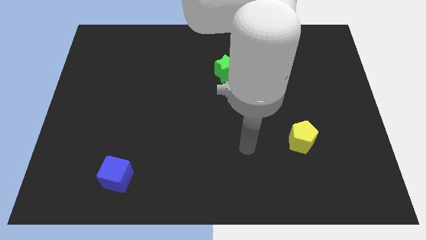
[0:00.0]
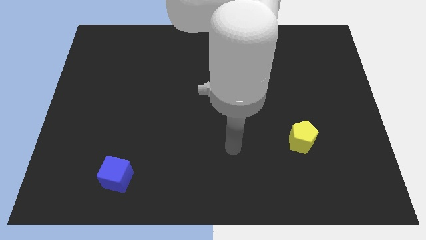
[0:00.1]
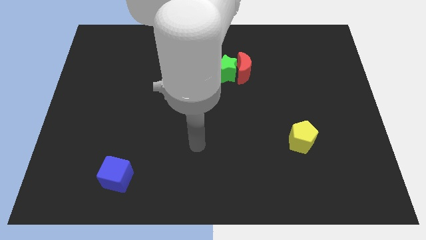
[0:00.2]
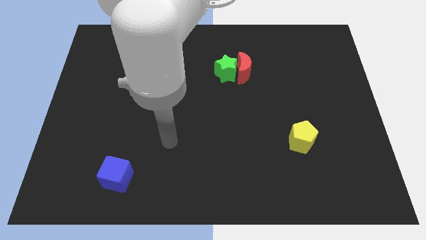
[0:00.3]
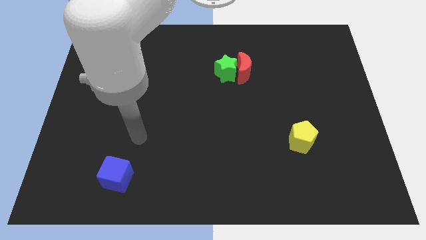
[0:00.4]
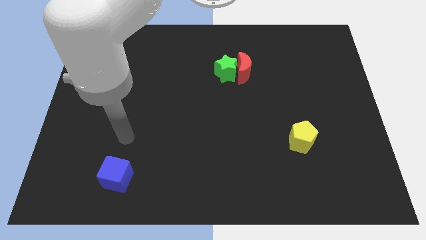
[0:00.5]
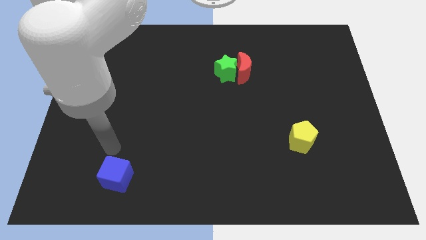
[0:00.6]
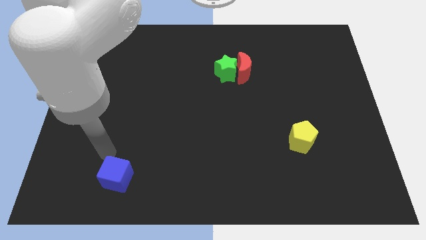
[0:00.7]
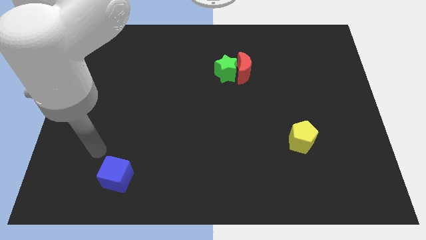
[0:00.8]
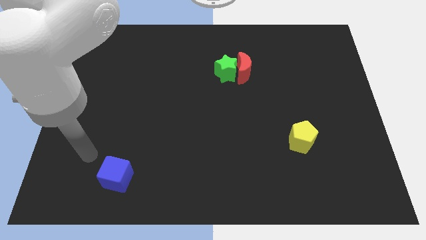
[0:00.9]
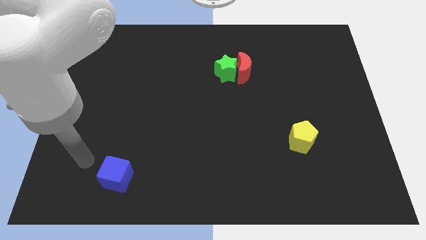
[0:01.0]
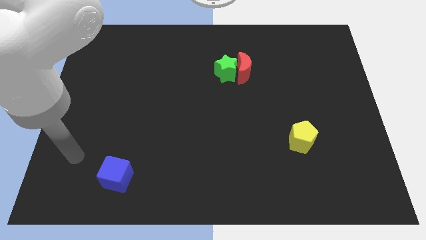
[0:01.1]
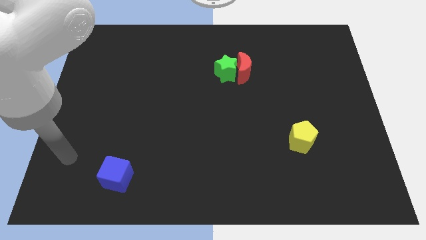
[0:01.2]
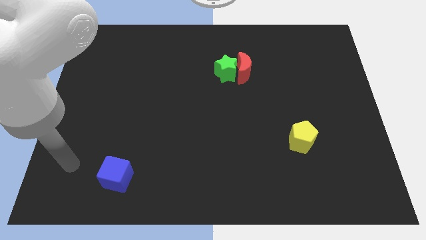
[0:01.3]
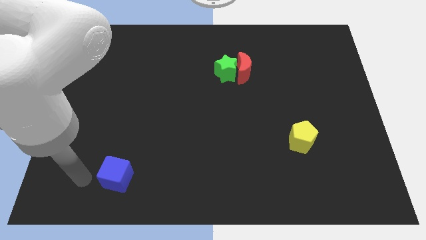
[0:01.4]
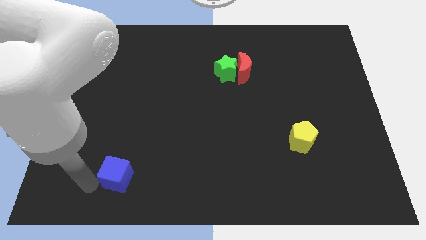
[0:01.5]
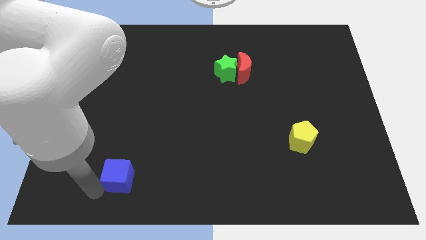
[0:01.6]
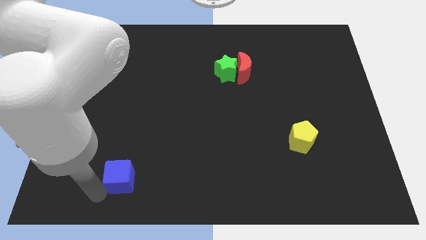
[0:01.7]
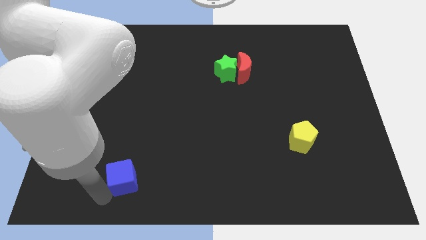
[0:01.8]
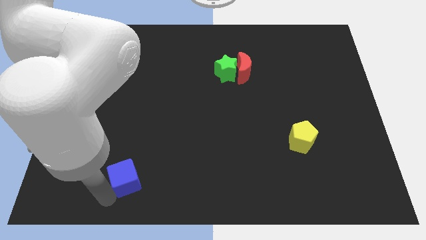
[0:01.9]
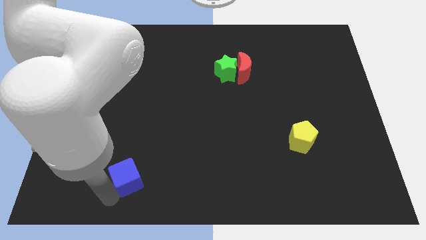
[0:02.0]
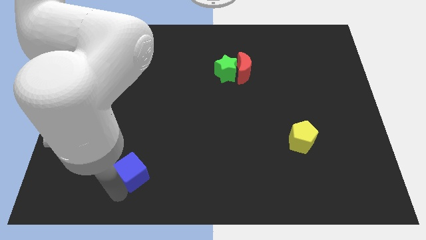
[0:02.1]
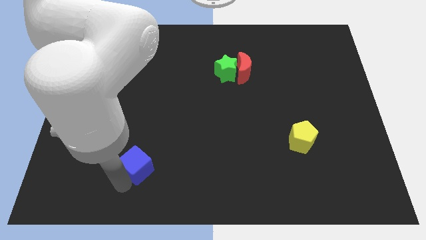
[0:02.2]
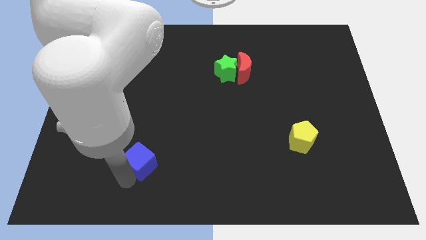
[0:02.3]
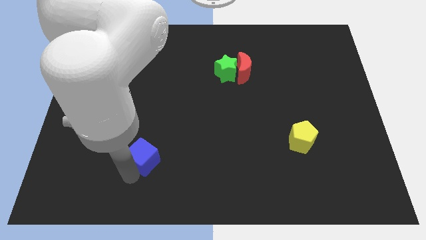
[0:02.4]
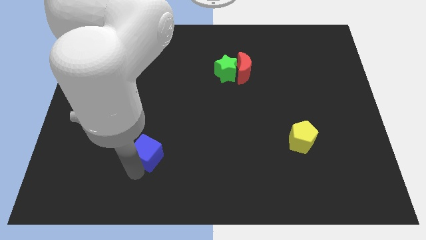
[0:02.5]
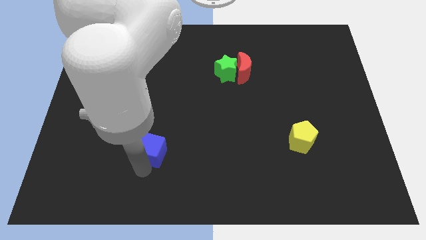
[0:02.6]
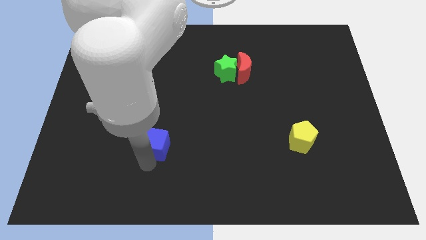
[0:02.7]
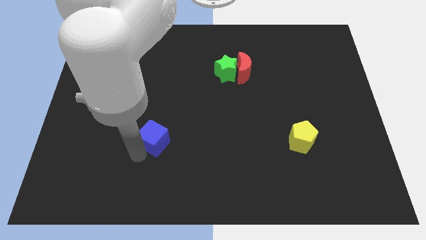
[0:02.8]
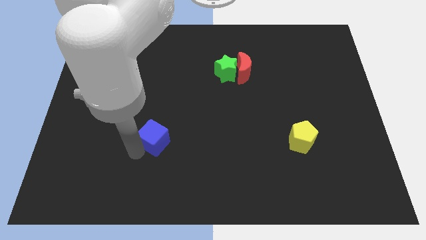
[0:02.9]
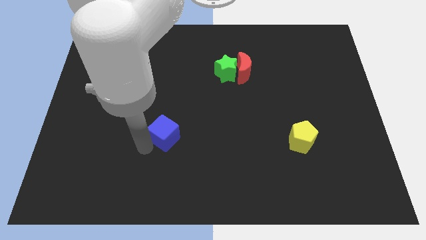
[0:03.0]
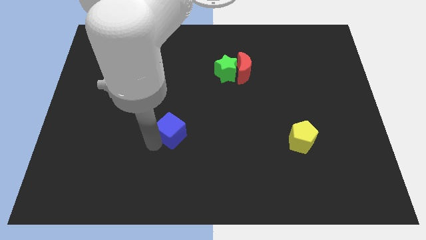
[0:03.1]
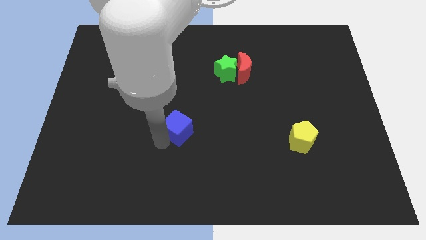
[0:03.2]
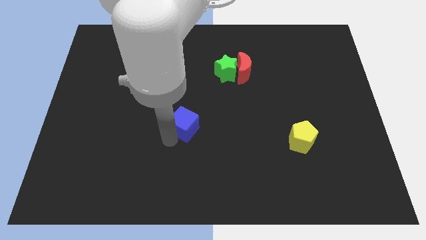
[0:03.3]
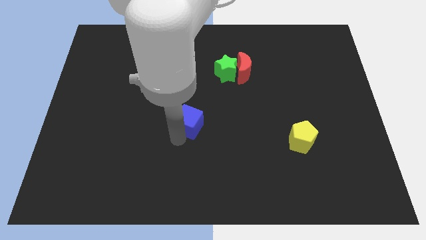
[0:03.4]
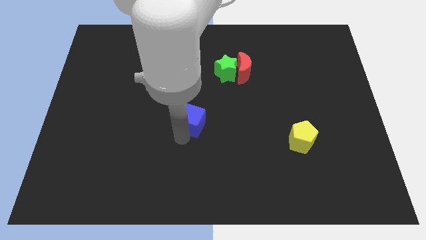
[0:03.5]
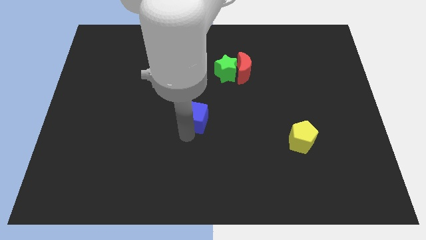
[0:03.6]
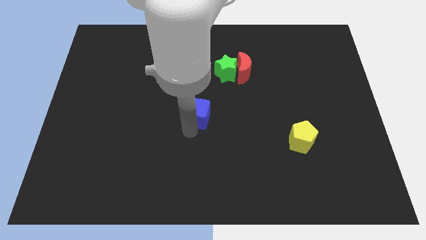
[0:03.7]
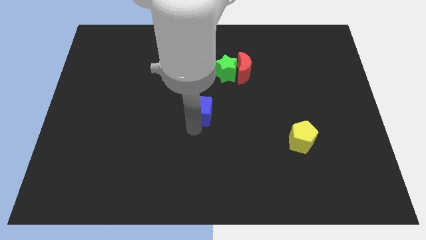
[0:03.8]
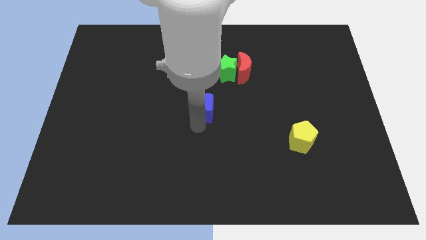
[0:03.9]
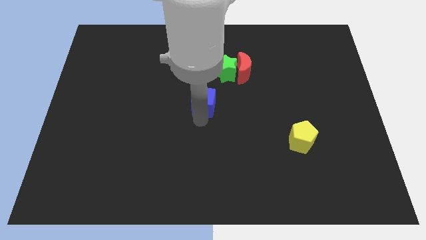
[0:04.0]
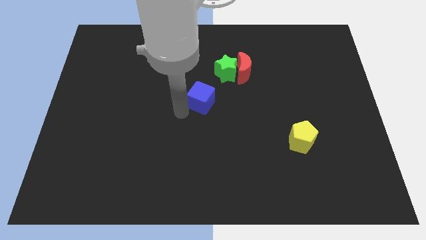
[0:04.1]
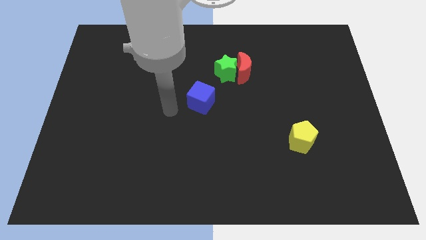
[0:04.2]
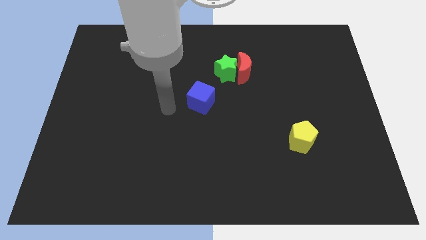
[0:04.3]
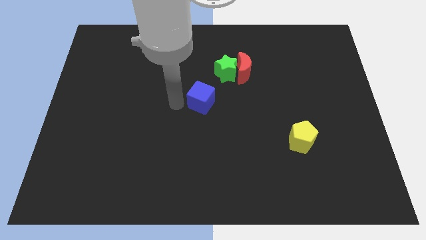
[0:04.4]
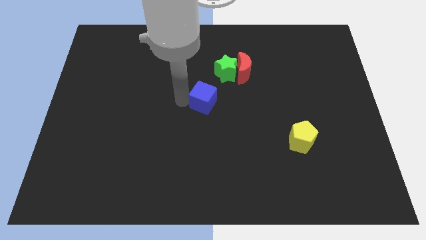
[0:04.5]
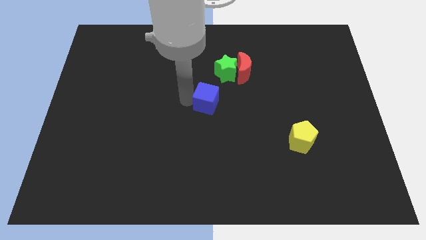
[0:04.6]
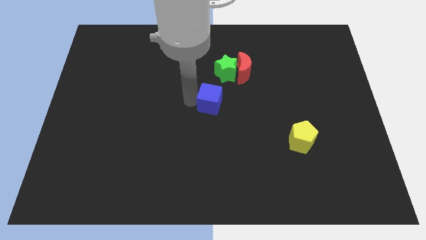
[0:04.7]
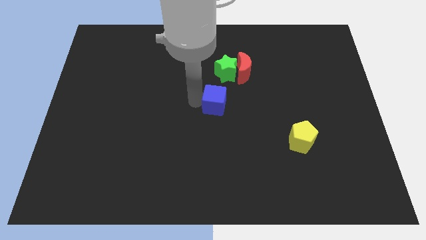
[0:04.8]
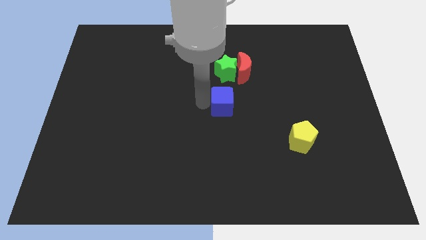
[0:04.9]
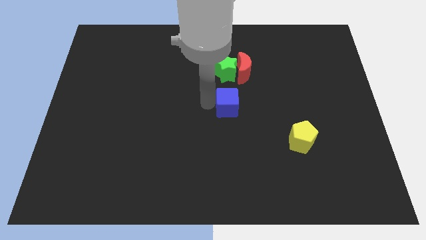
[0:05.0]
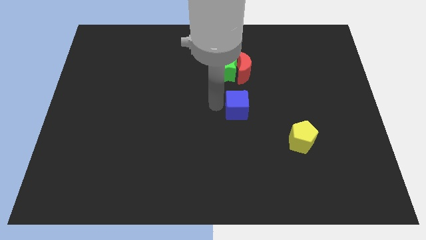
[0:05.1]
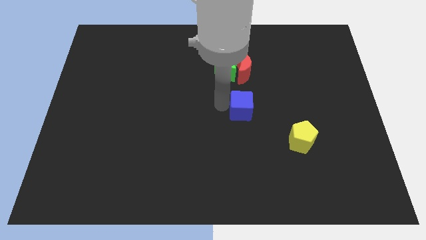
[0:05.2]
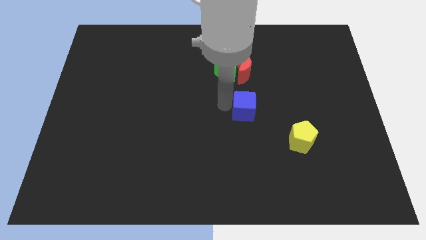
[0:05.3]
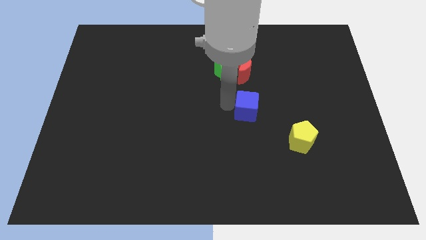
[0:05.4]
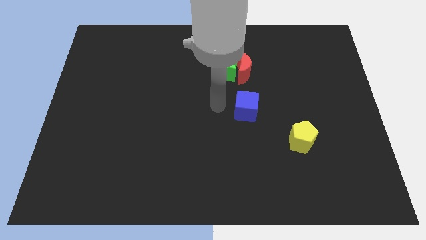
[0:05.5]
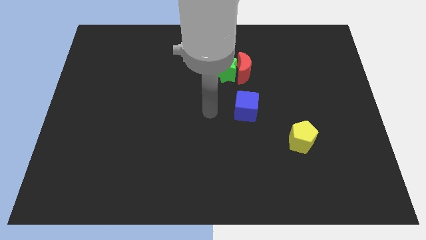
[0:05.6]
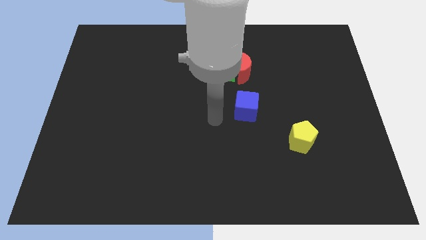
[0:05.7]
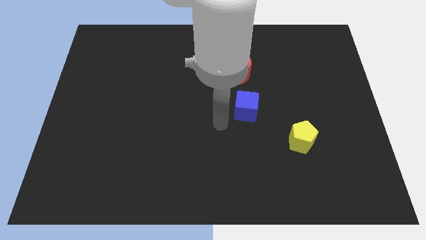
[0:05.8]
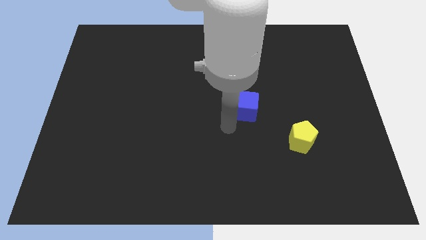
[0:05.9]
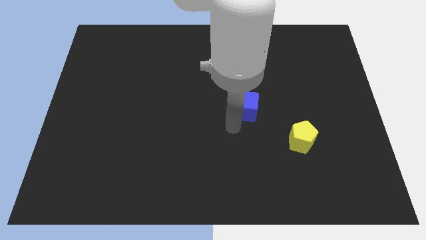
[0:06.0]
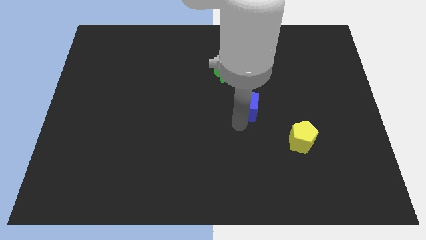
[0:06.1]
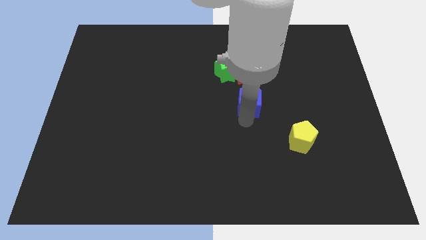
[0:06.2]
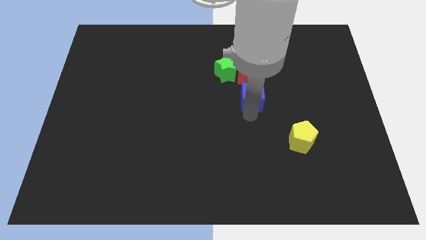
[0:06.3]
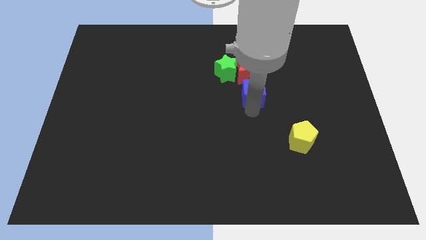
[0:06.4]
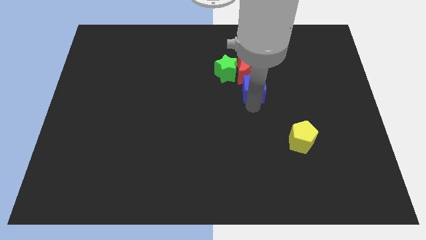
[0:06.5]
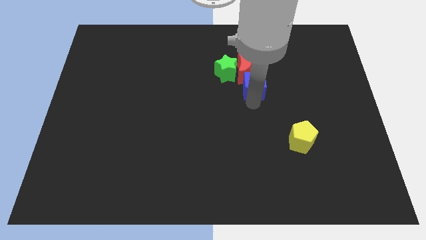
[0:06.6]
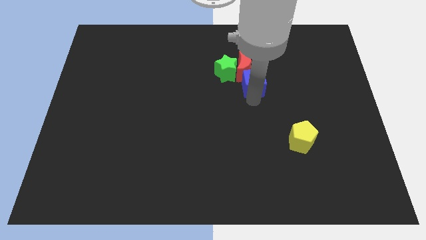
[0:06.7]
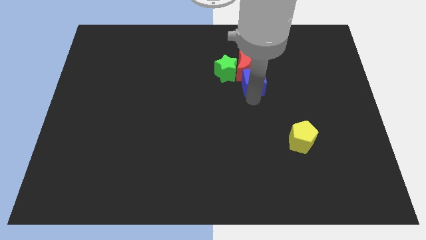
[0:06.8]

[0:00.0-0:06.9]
move the blue block towards the red block

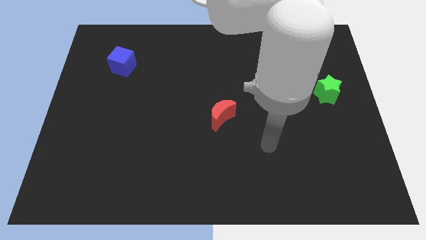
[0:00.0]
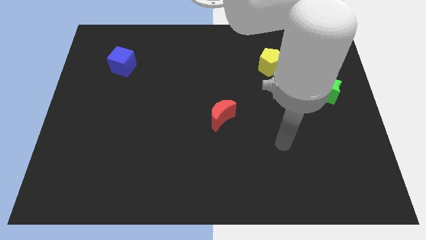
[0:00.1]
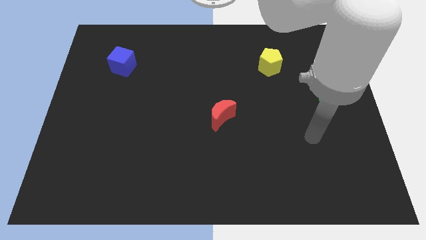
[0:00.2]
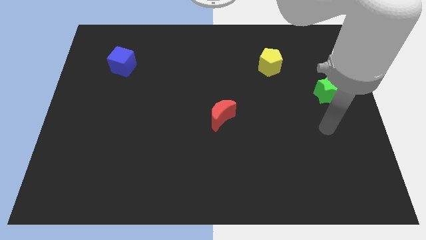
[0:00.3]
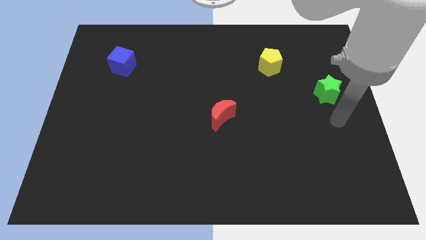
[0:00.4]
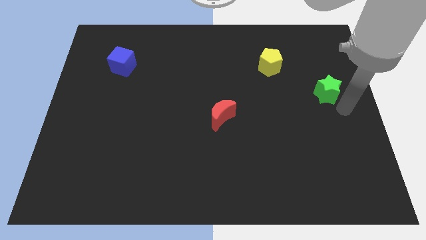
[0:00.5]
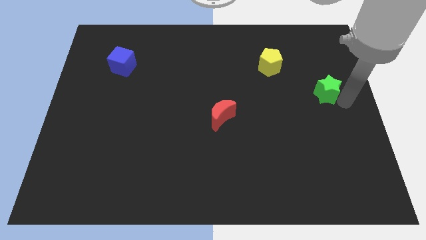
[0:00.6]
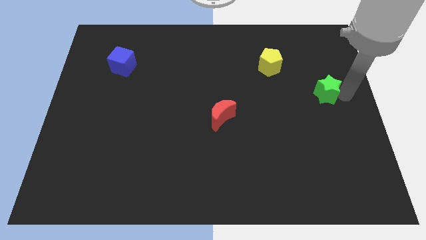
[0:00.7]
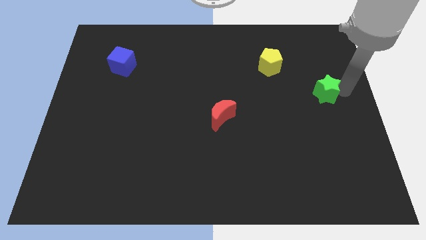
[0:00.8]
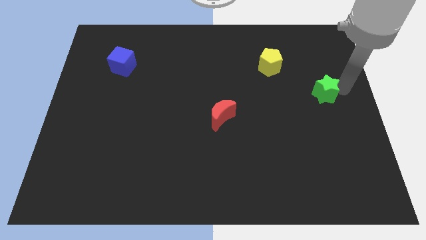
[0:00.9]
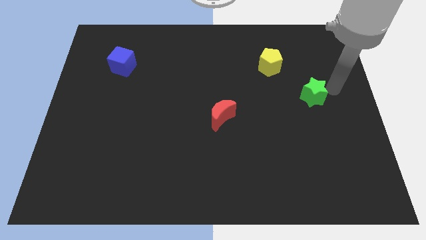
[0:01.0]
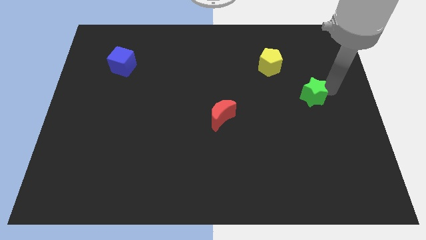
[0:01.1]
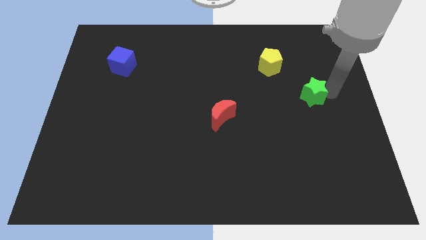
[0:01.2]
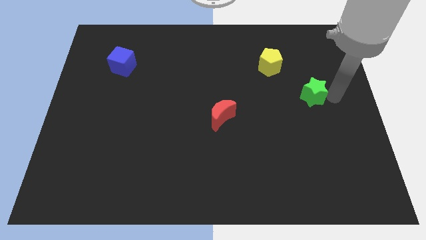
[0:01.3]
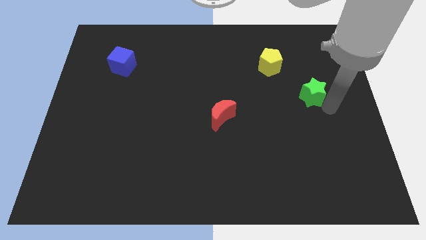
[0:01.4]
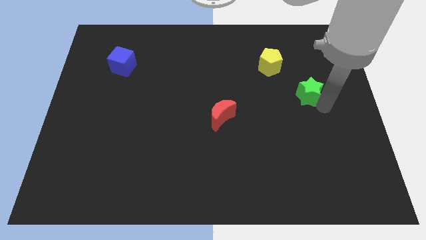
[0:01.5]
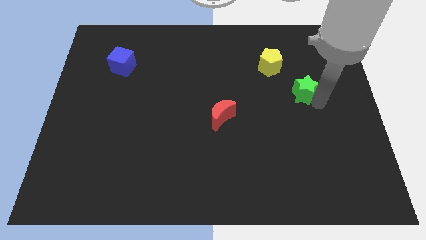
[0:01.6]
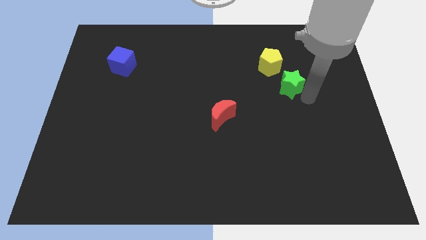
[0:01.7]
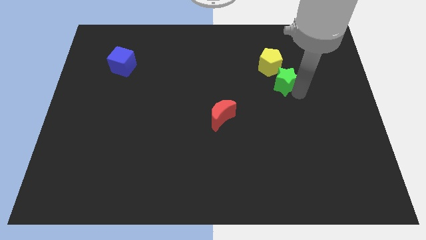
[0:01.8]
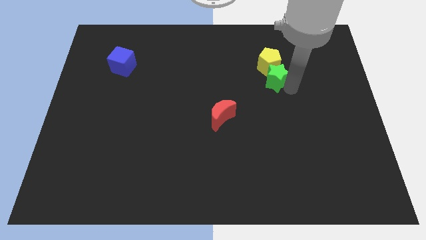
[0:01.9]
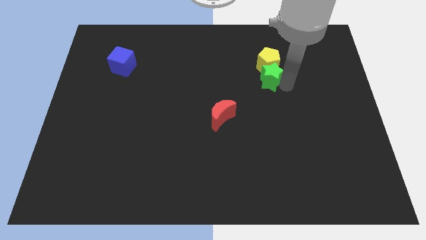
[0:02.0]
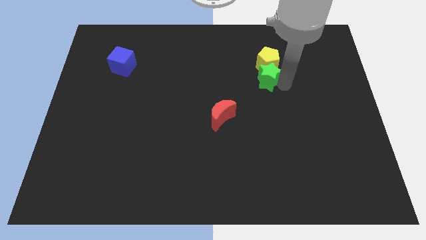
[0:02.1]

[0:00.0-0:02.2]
move the green block close to the pentagon
